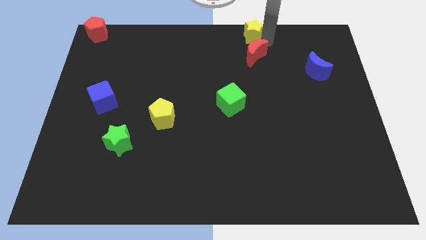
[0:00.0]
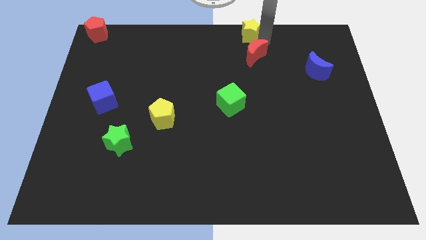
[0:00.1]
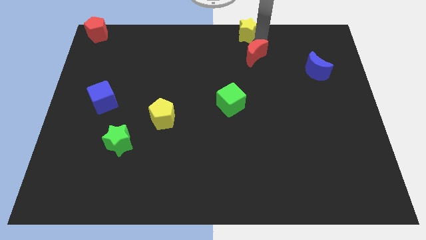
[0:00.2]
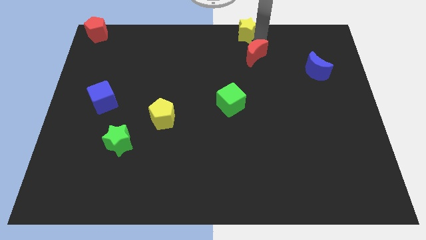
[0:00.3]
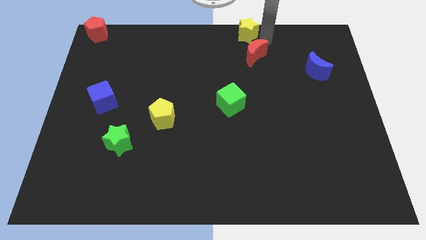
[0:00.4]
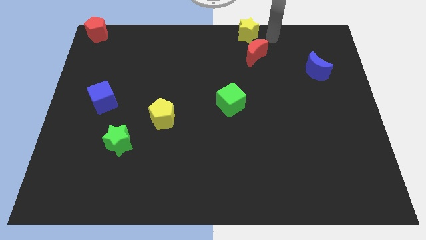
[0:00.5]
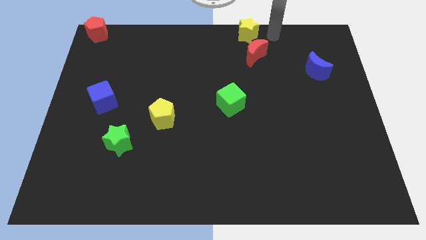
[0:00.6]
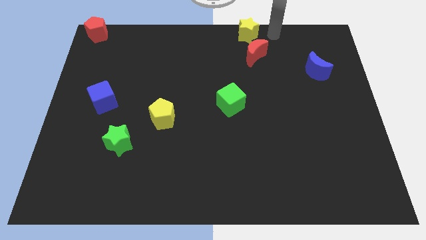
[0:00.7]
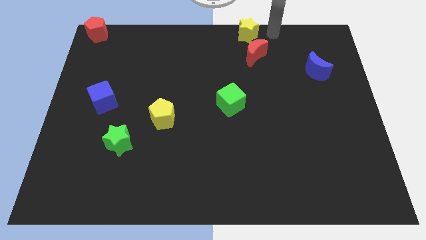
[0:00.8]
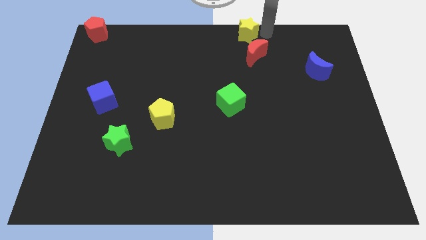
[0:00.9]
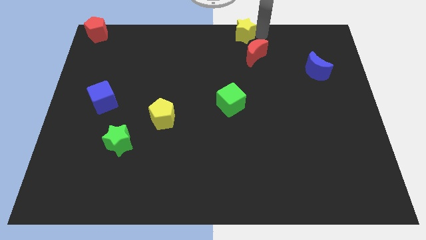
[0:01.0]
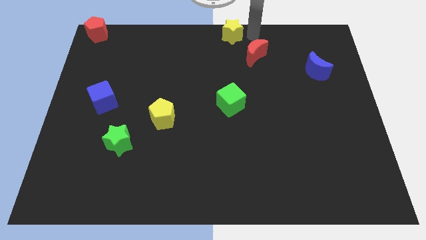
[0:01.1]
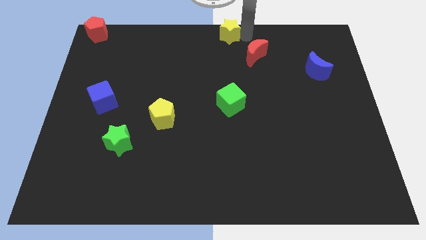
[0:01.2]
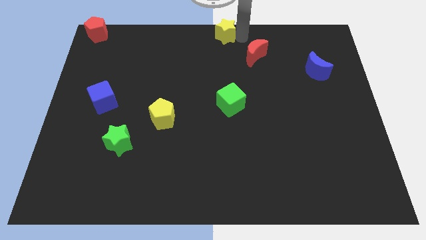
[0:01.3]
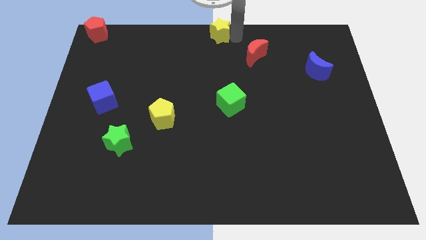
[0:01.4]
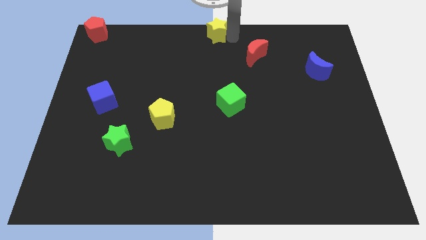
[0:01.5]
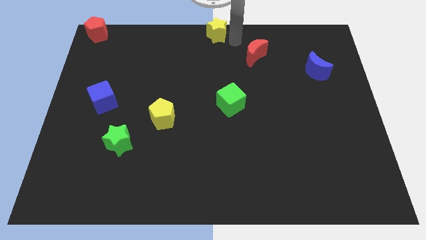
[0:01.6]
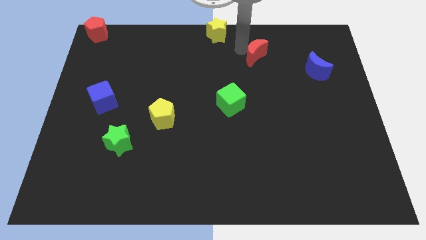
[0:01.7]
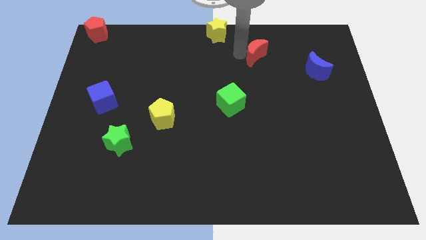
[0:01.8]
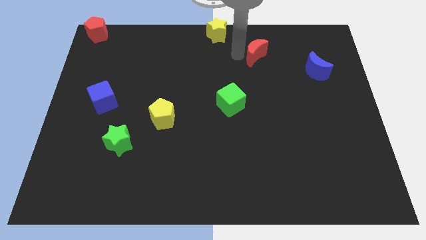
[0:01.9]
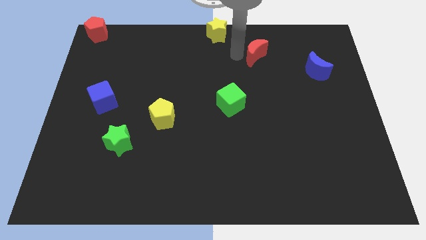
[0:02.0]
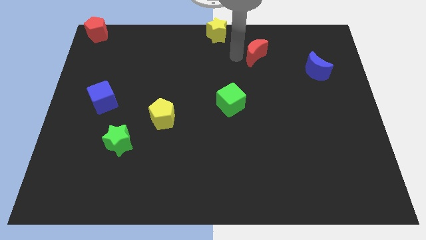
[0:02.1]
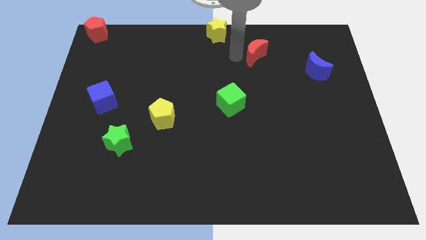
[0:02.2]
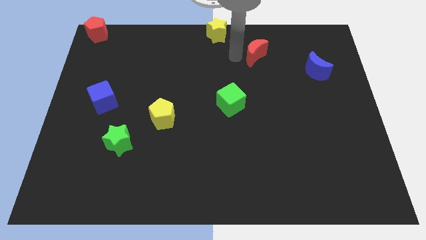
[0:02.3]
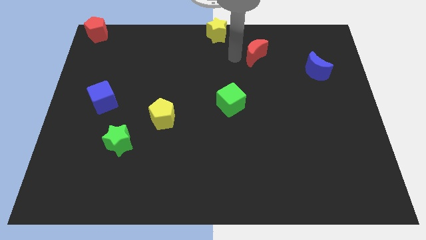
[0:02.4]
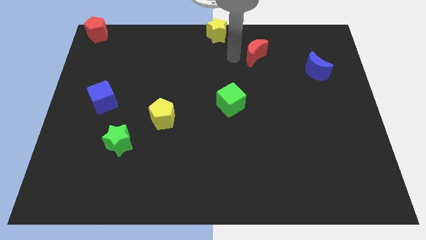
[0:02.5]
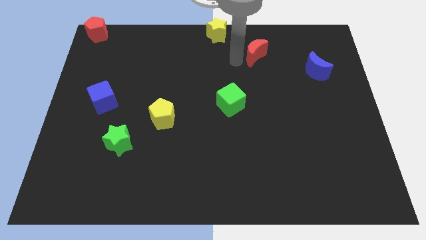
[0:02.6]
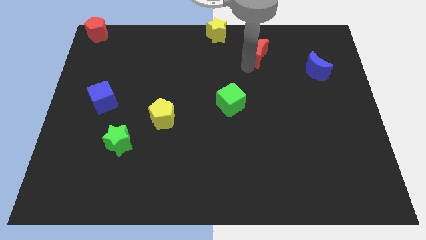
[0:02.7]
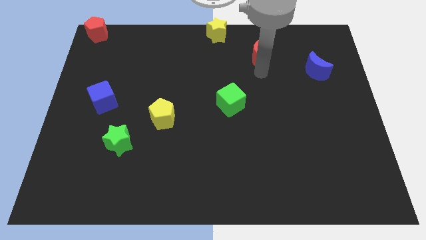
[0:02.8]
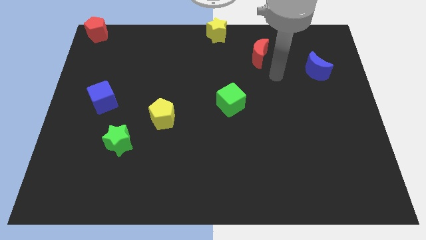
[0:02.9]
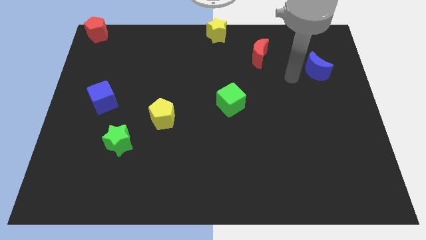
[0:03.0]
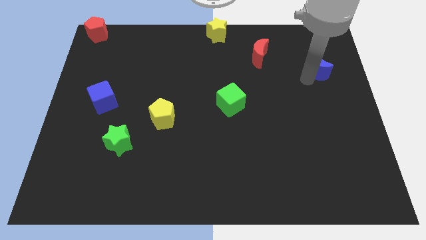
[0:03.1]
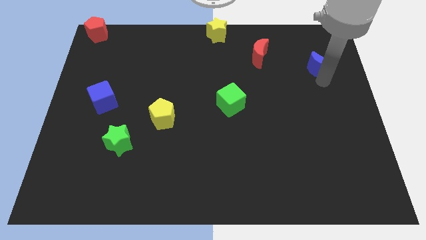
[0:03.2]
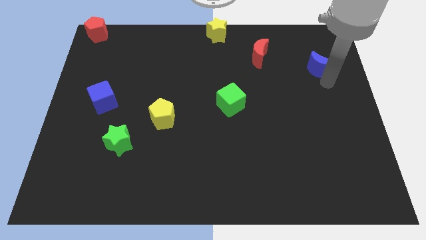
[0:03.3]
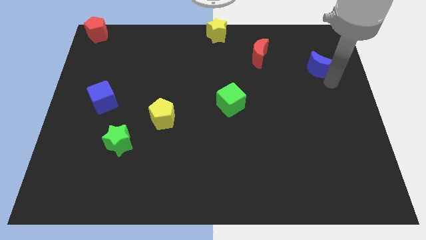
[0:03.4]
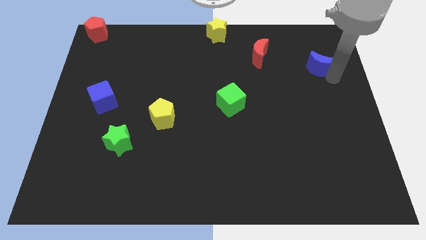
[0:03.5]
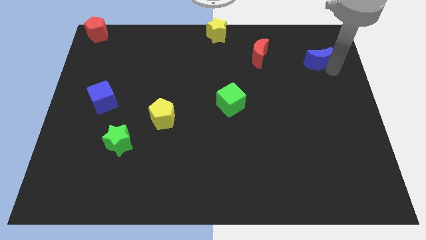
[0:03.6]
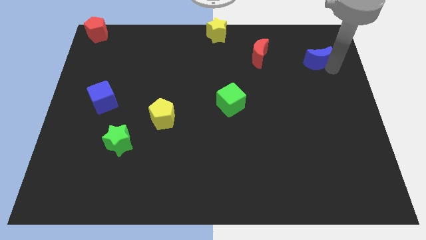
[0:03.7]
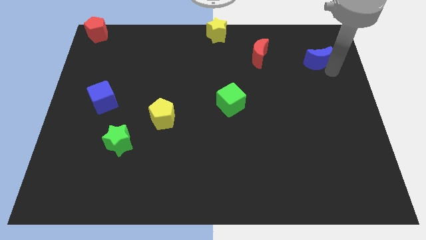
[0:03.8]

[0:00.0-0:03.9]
move the yellow star to the top center of the board

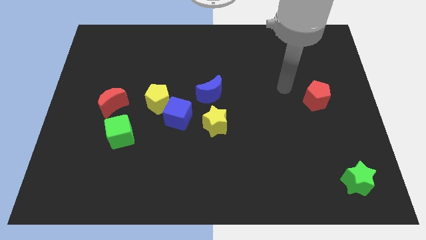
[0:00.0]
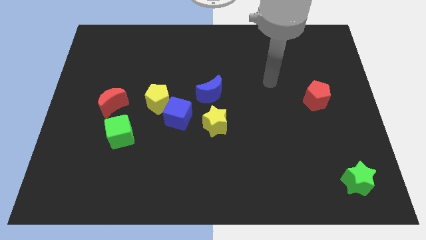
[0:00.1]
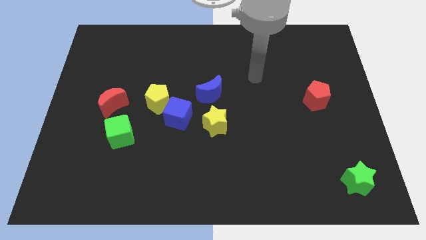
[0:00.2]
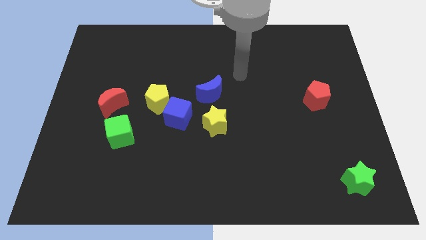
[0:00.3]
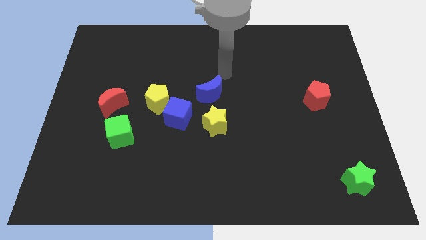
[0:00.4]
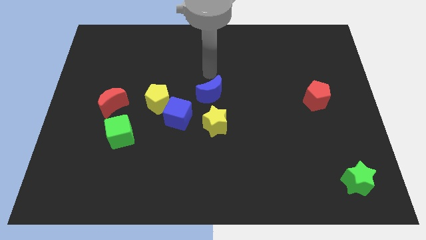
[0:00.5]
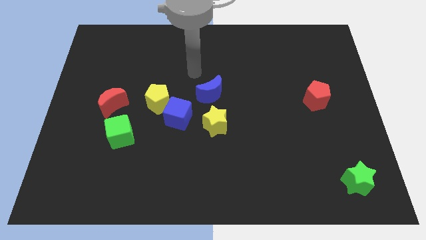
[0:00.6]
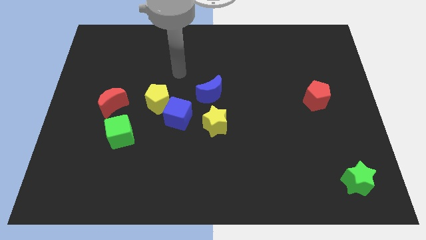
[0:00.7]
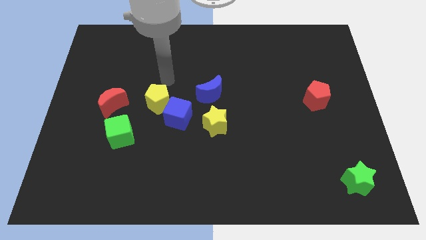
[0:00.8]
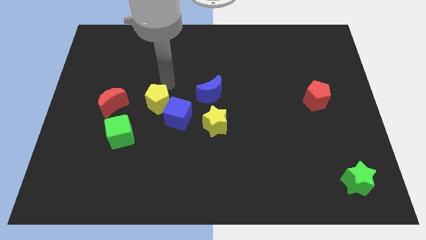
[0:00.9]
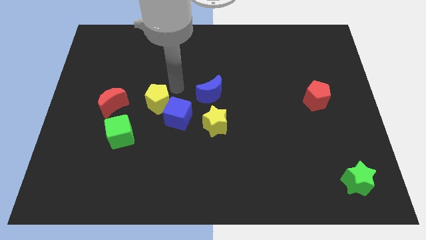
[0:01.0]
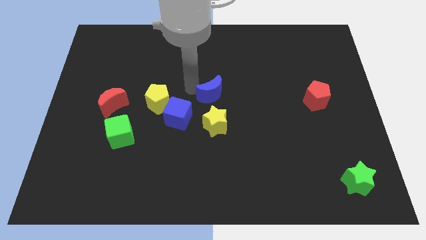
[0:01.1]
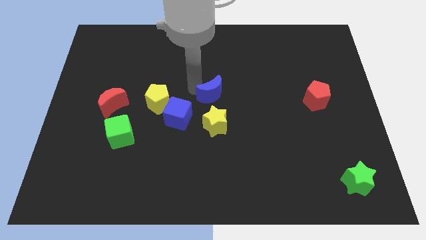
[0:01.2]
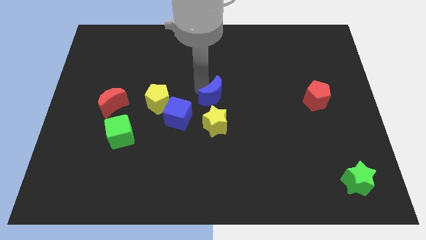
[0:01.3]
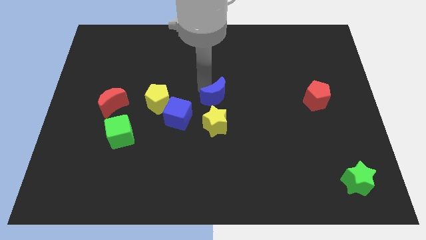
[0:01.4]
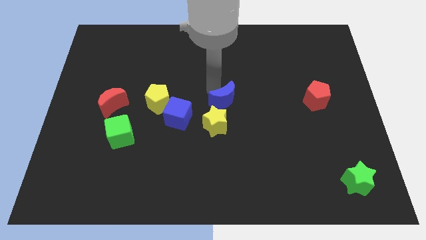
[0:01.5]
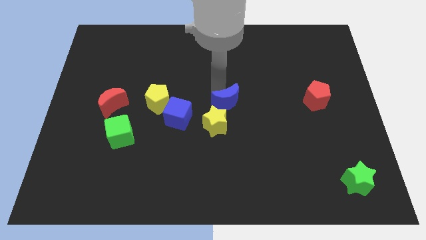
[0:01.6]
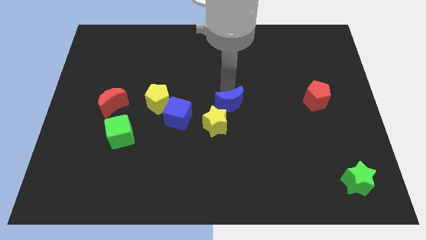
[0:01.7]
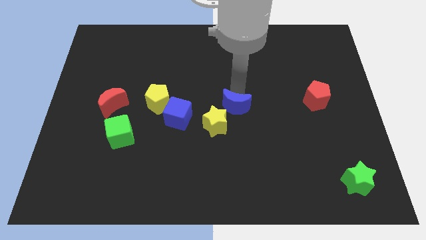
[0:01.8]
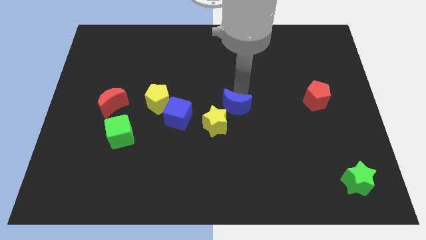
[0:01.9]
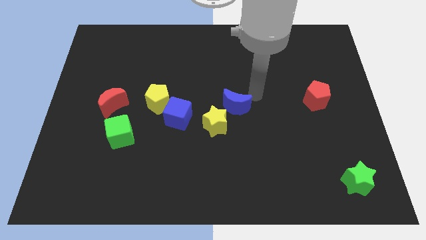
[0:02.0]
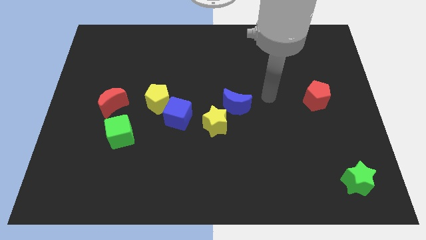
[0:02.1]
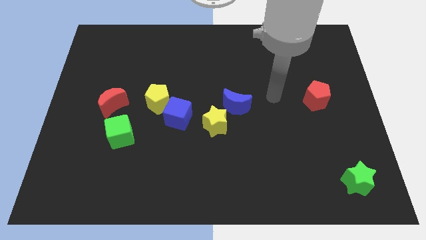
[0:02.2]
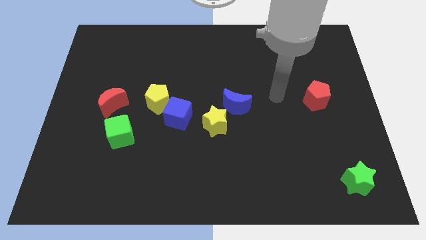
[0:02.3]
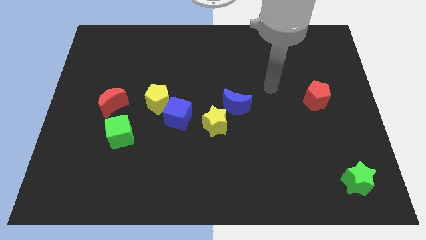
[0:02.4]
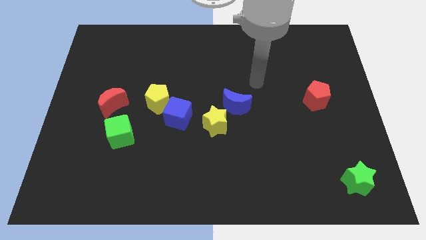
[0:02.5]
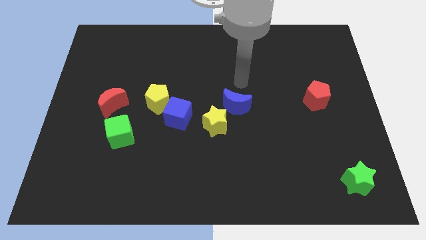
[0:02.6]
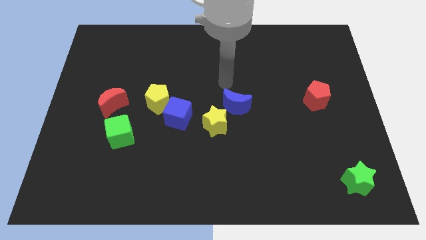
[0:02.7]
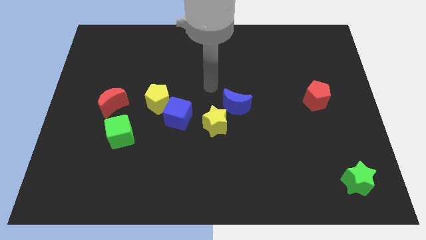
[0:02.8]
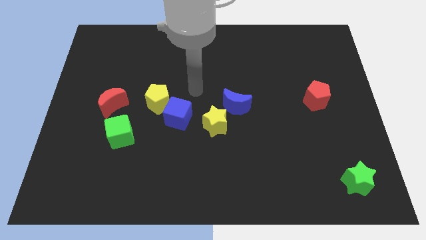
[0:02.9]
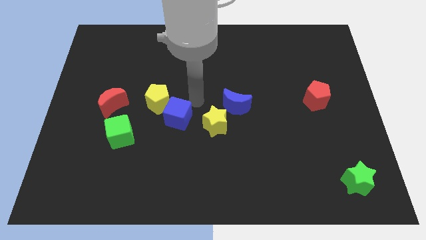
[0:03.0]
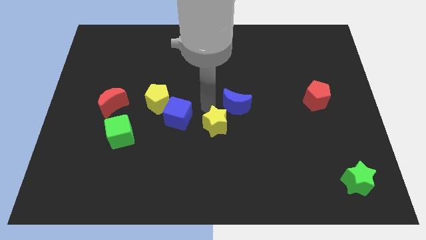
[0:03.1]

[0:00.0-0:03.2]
slightly push the blue crescent to right side

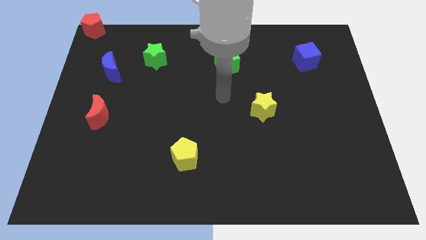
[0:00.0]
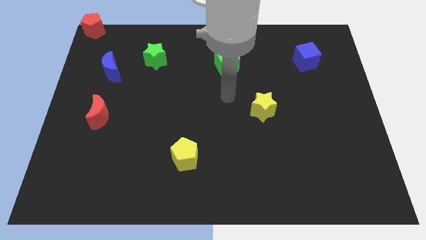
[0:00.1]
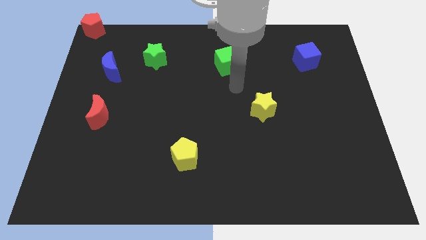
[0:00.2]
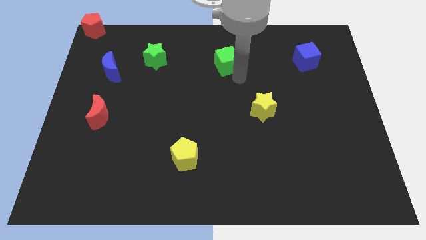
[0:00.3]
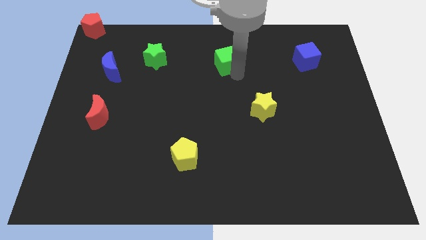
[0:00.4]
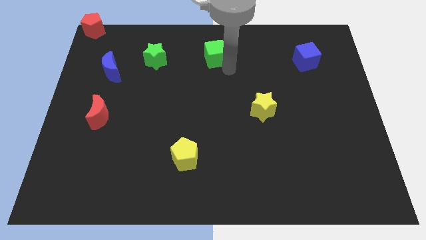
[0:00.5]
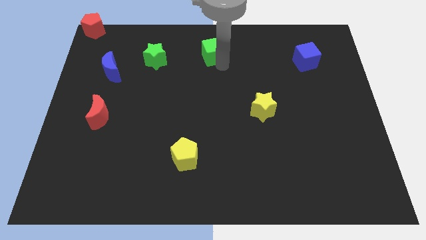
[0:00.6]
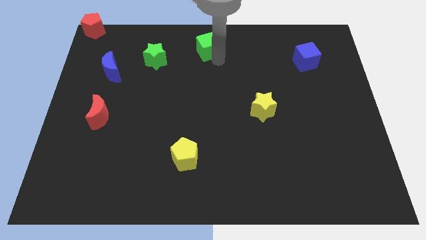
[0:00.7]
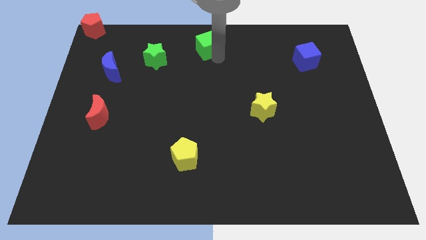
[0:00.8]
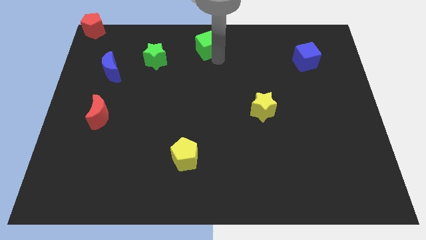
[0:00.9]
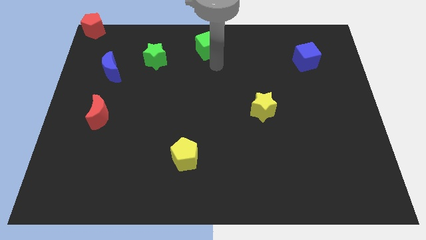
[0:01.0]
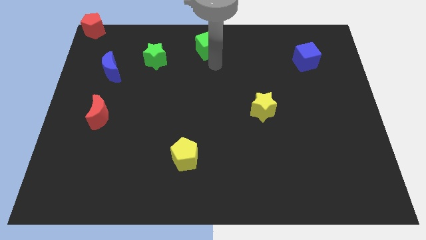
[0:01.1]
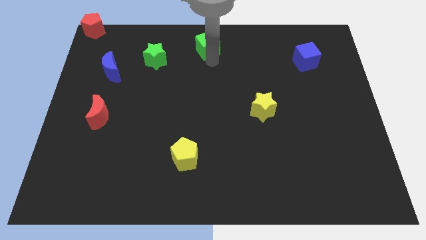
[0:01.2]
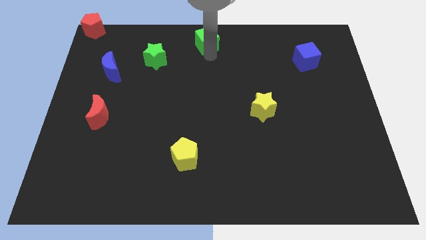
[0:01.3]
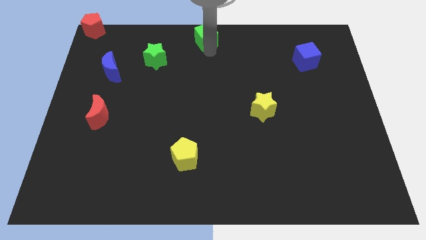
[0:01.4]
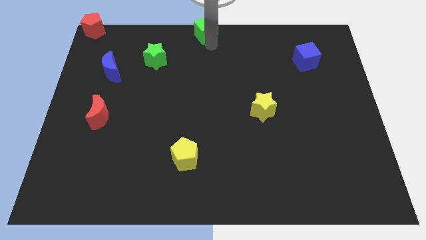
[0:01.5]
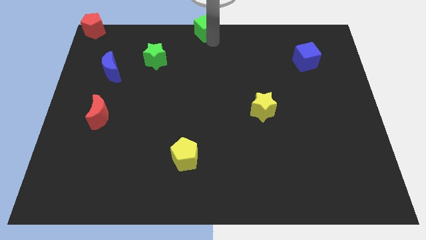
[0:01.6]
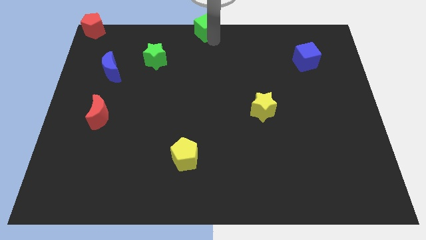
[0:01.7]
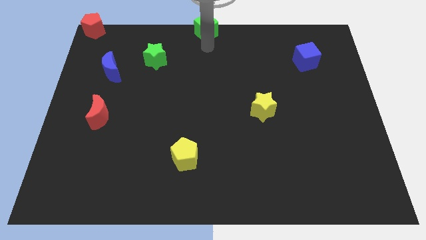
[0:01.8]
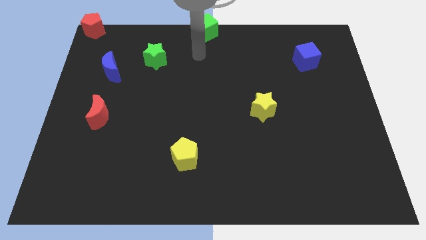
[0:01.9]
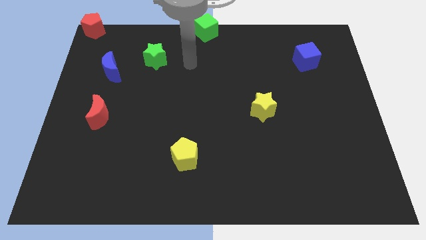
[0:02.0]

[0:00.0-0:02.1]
slide the green cube to the top center of the board
